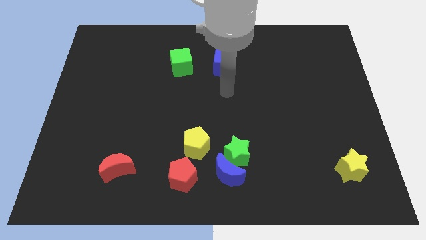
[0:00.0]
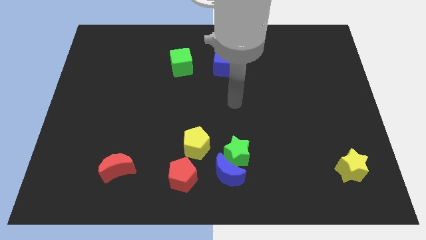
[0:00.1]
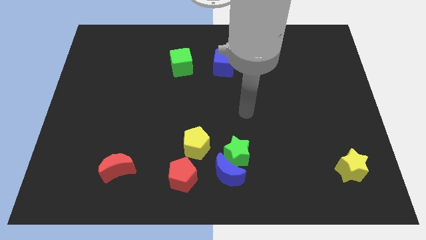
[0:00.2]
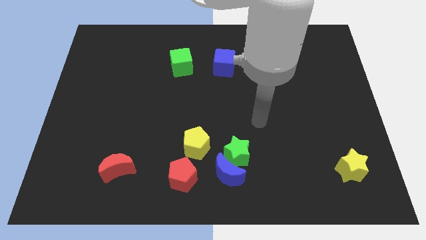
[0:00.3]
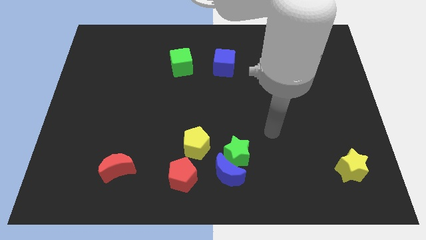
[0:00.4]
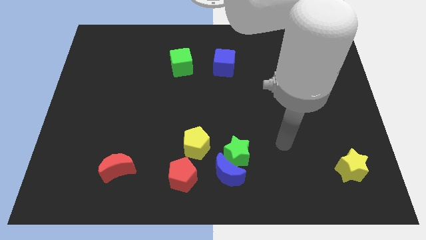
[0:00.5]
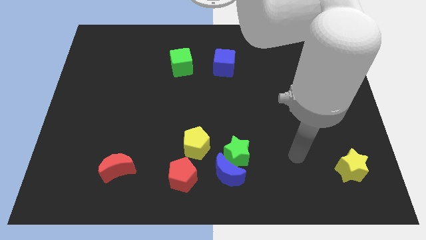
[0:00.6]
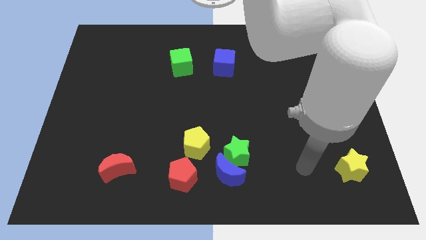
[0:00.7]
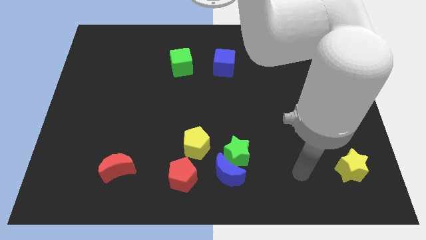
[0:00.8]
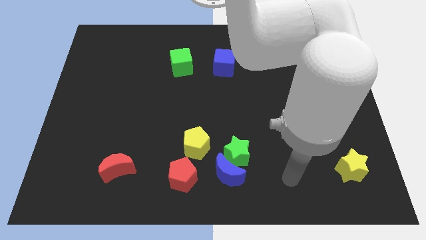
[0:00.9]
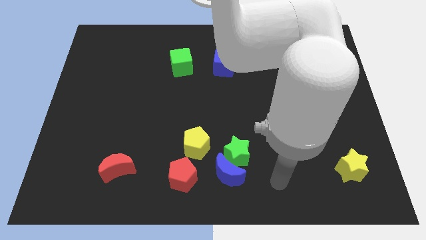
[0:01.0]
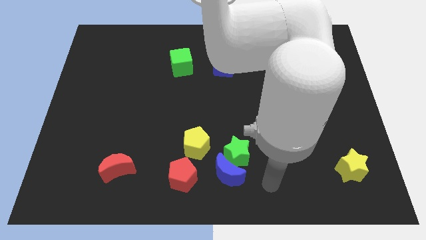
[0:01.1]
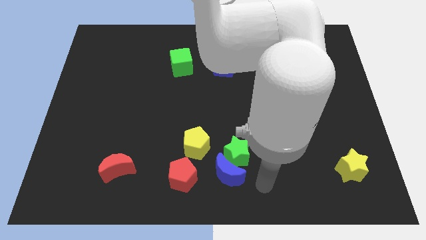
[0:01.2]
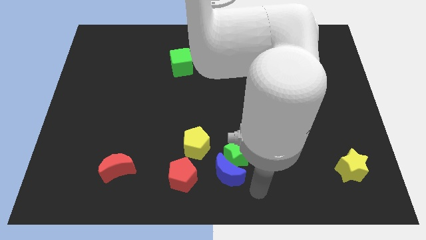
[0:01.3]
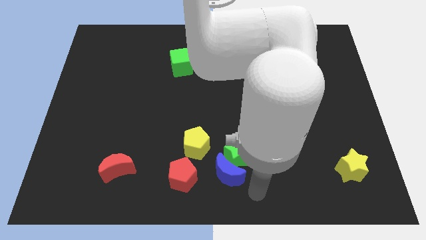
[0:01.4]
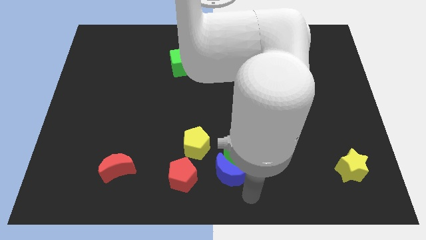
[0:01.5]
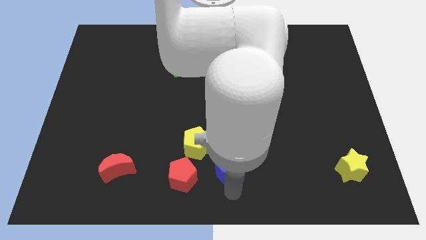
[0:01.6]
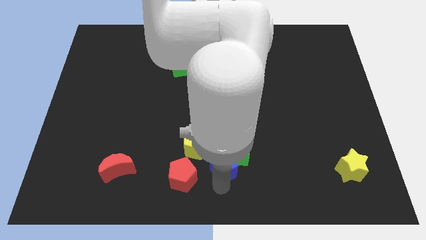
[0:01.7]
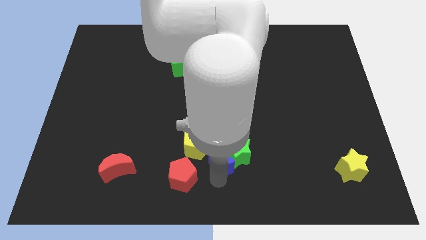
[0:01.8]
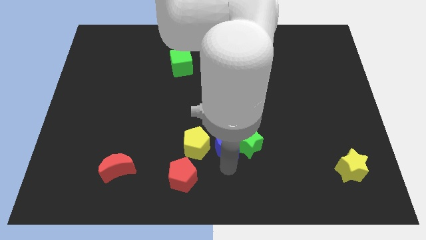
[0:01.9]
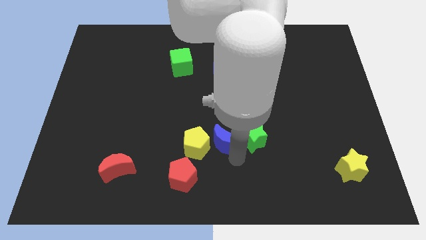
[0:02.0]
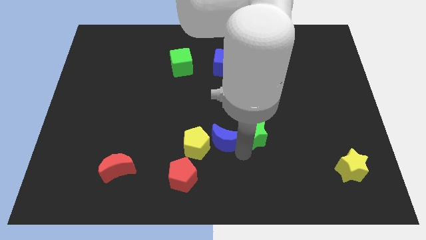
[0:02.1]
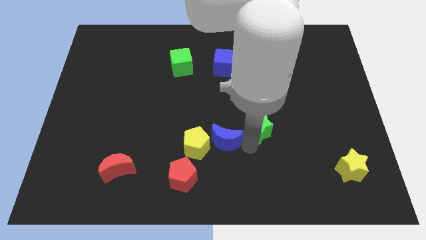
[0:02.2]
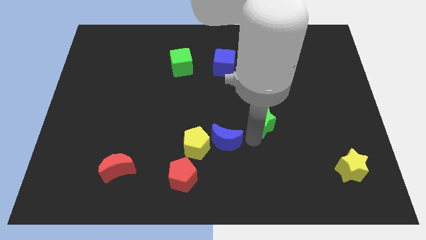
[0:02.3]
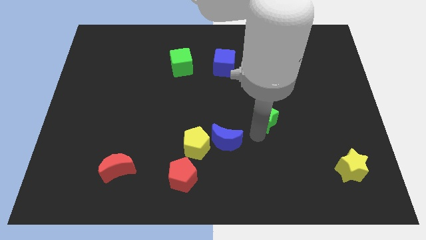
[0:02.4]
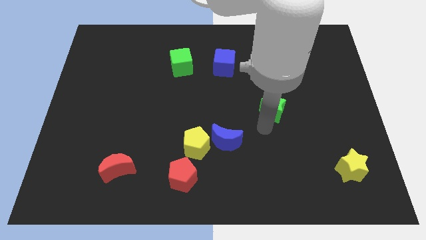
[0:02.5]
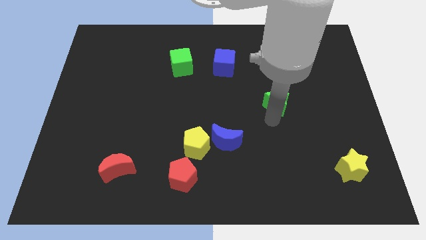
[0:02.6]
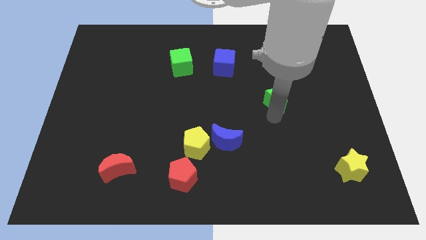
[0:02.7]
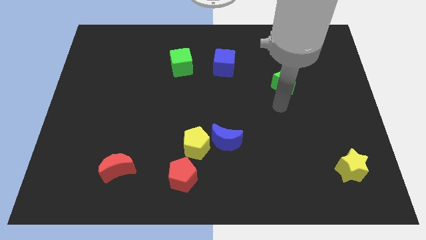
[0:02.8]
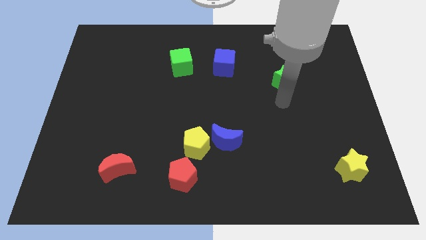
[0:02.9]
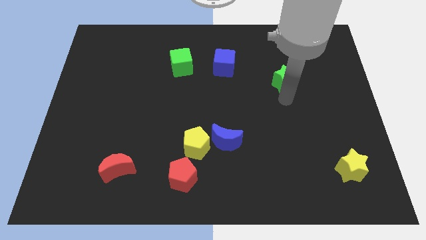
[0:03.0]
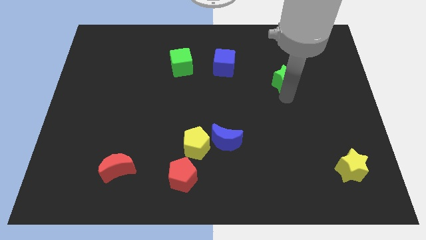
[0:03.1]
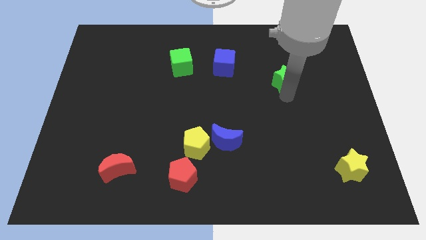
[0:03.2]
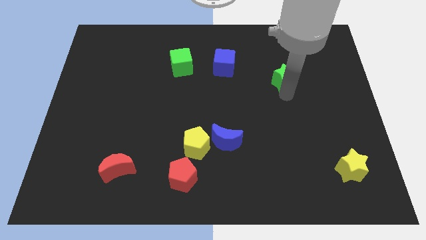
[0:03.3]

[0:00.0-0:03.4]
separate greem star from the blue moon

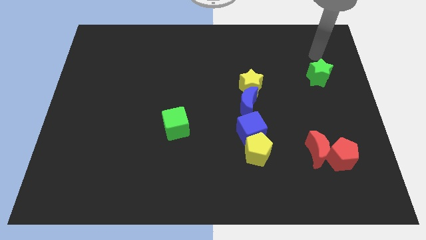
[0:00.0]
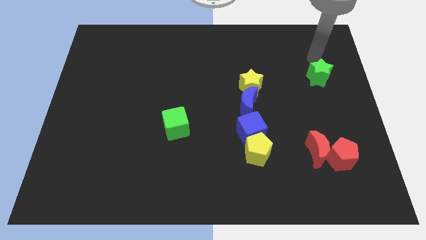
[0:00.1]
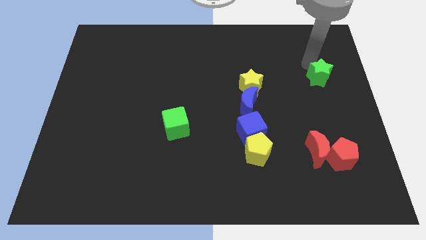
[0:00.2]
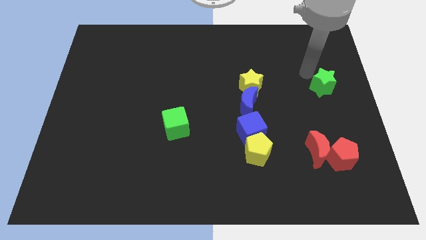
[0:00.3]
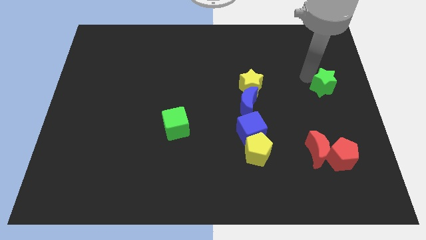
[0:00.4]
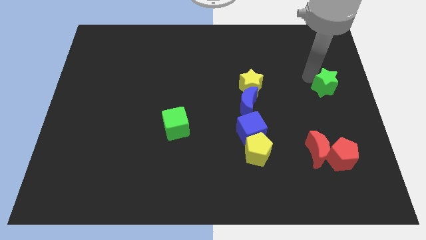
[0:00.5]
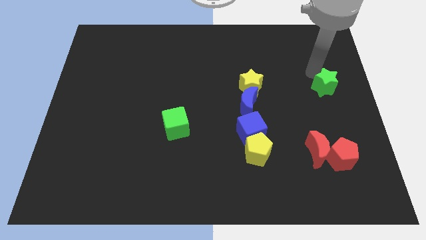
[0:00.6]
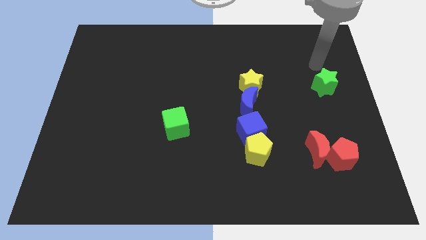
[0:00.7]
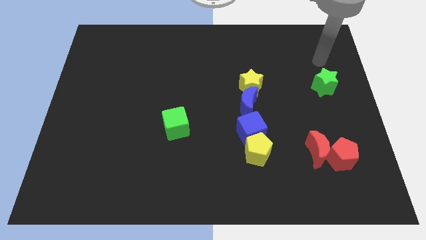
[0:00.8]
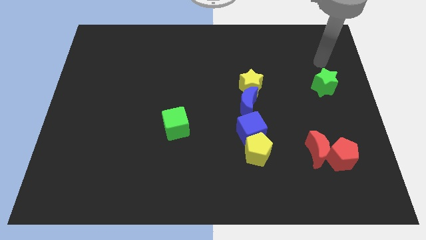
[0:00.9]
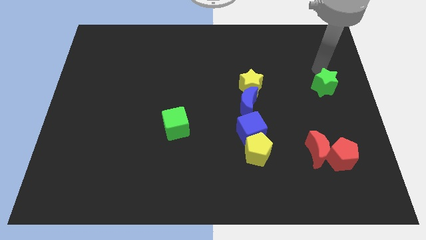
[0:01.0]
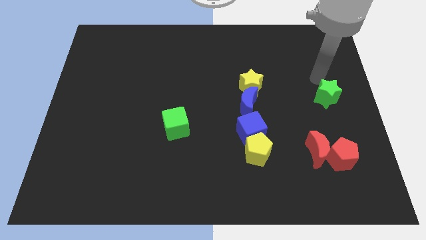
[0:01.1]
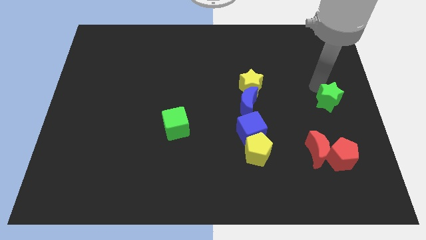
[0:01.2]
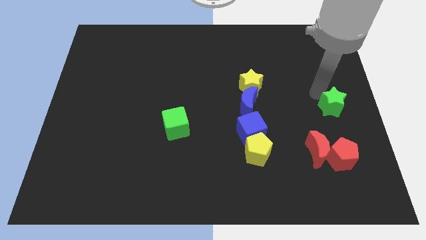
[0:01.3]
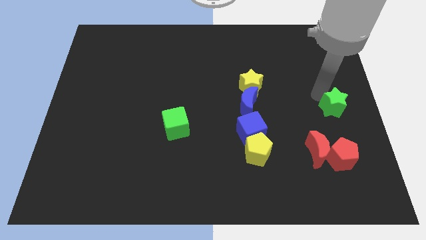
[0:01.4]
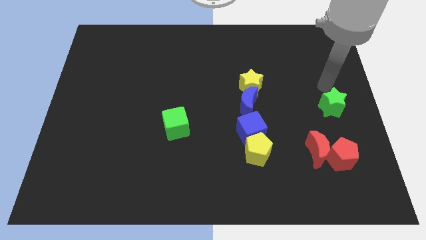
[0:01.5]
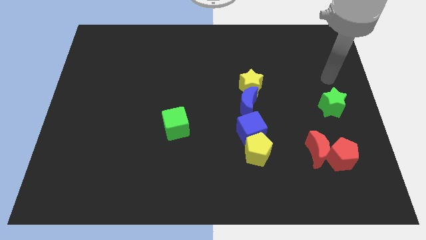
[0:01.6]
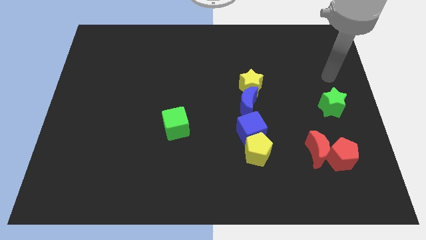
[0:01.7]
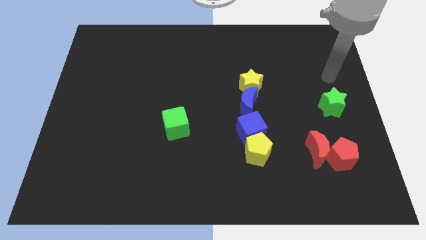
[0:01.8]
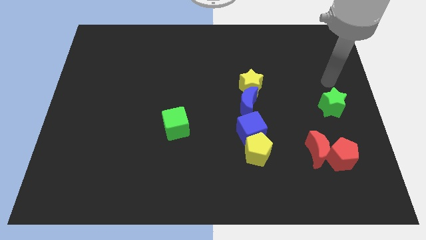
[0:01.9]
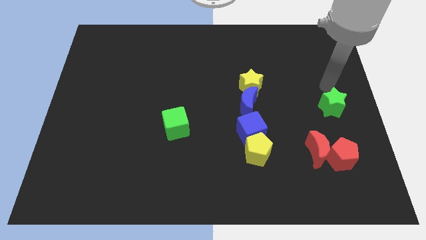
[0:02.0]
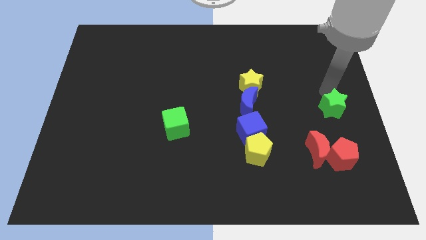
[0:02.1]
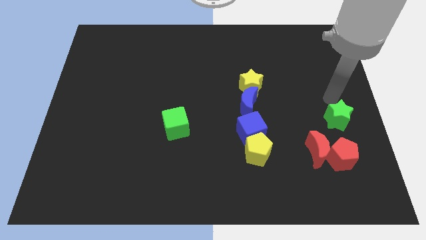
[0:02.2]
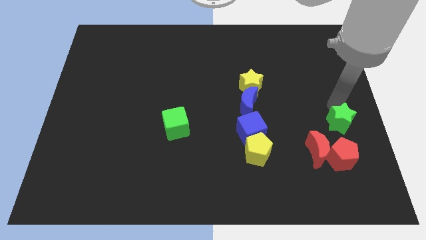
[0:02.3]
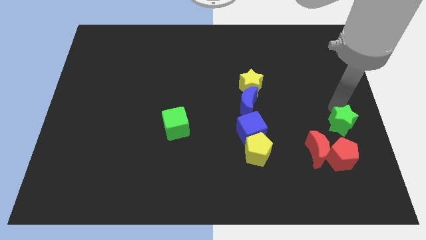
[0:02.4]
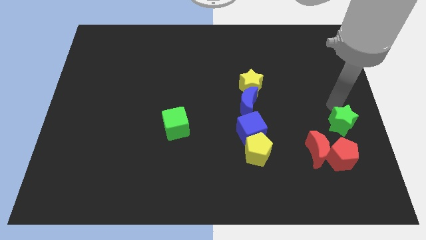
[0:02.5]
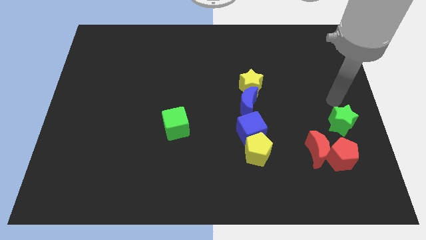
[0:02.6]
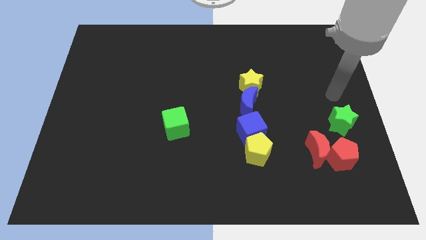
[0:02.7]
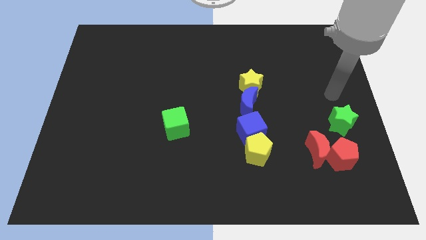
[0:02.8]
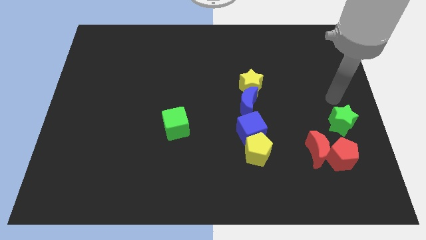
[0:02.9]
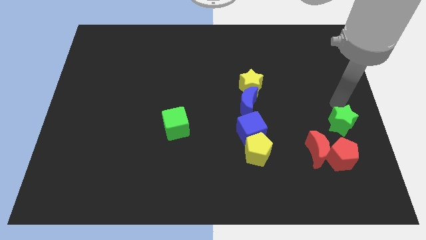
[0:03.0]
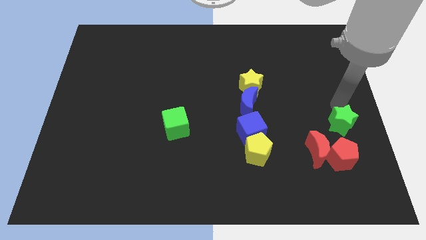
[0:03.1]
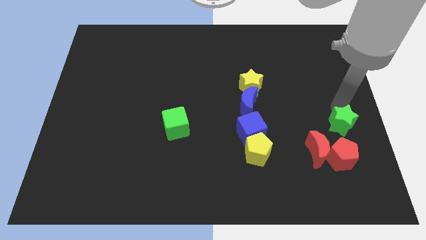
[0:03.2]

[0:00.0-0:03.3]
push the green star slightly close to the red crescent and red pentagon

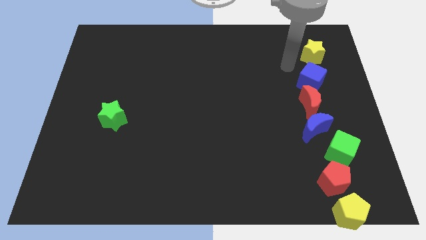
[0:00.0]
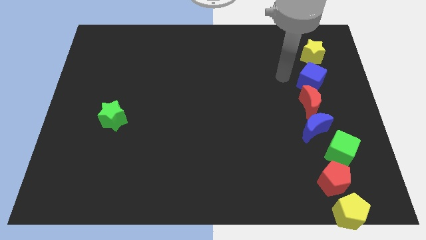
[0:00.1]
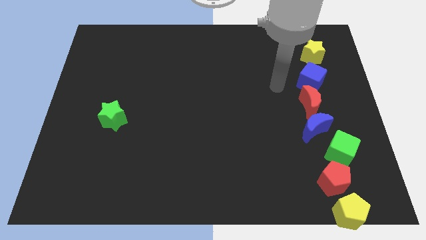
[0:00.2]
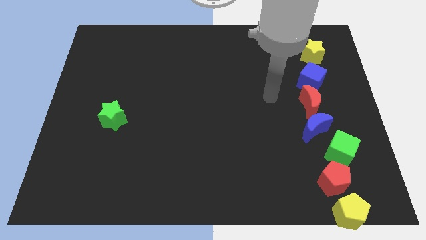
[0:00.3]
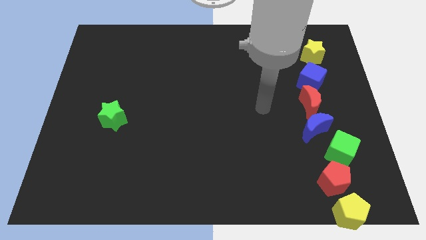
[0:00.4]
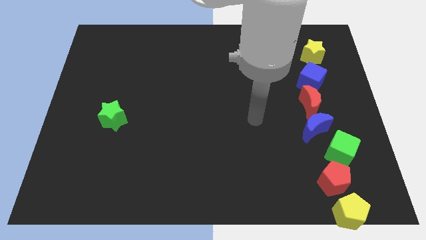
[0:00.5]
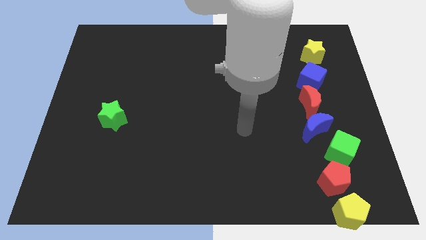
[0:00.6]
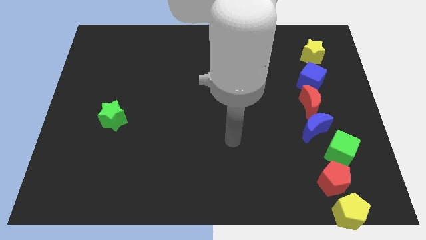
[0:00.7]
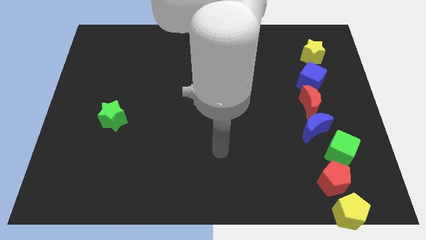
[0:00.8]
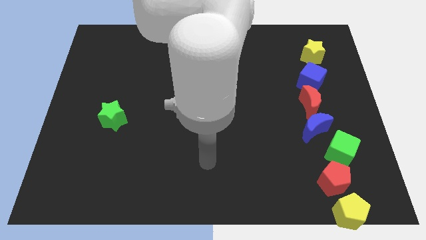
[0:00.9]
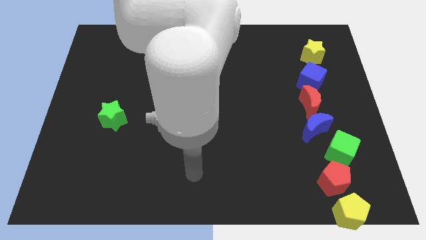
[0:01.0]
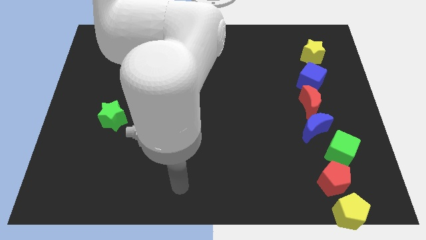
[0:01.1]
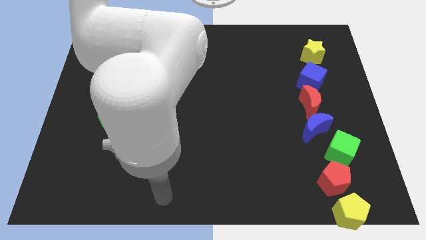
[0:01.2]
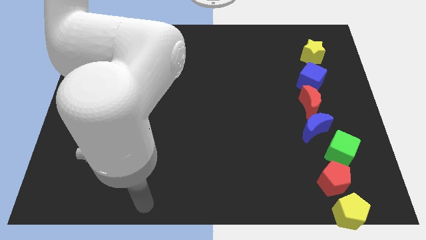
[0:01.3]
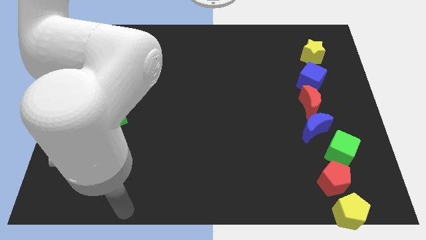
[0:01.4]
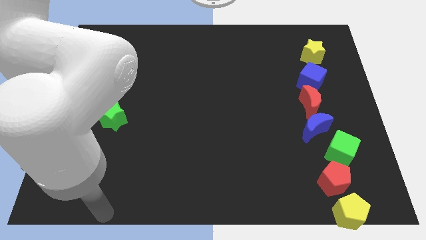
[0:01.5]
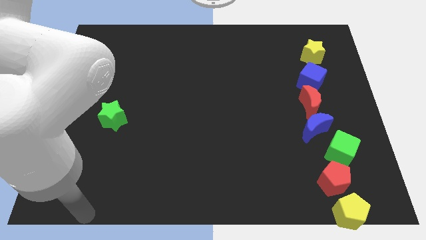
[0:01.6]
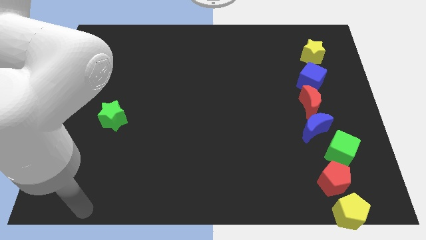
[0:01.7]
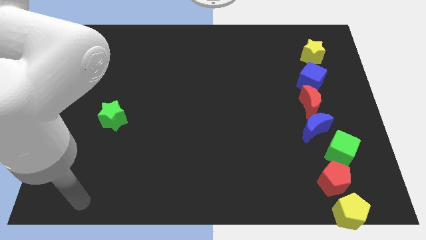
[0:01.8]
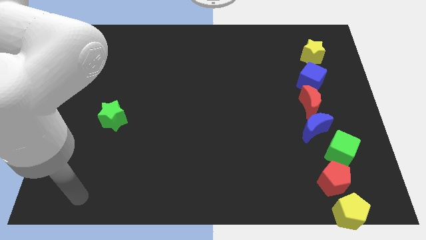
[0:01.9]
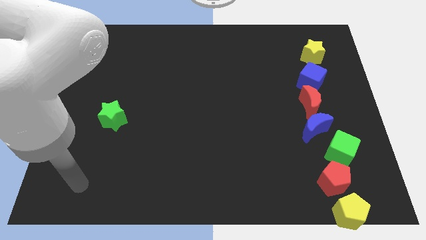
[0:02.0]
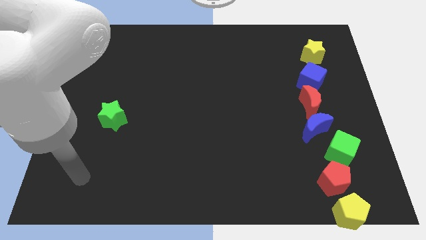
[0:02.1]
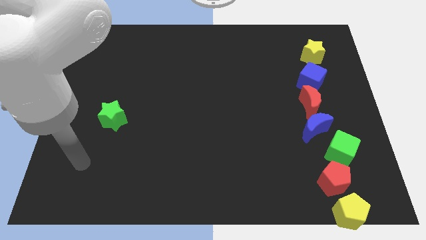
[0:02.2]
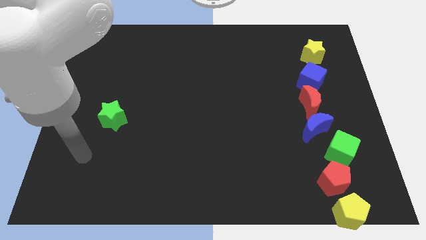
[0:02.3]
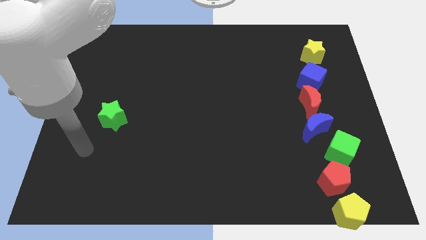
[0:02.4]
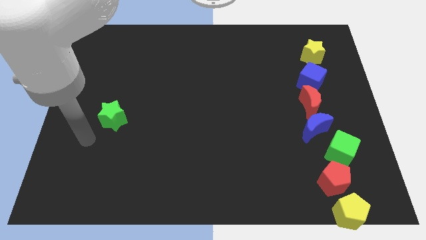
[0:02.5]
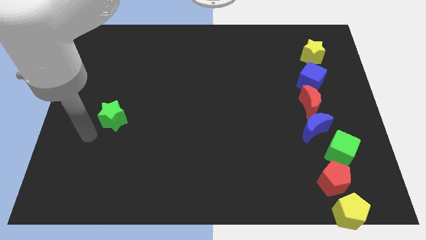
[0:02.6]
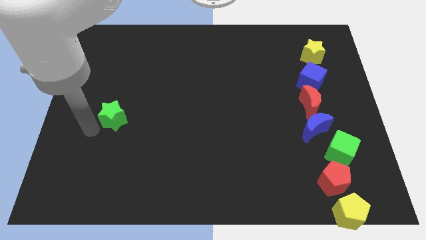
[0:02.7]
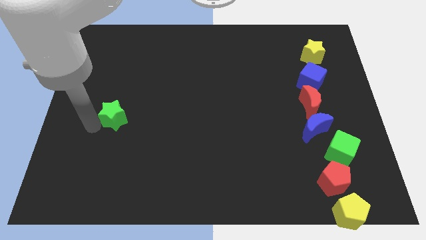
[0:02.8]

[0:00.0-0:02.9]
point your arm at the left of the green star
